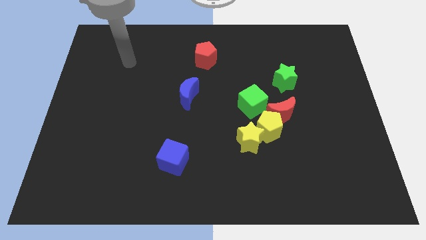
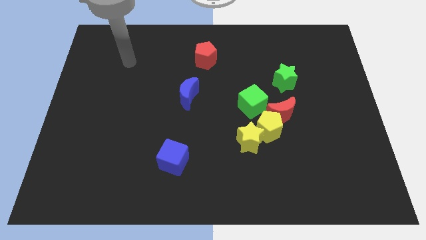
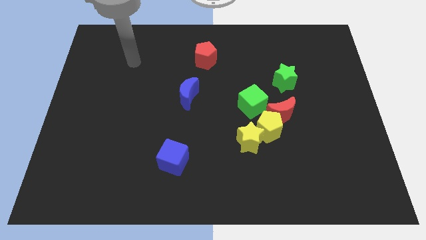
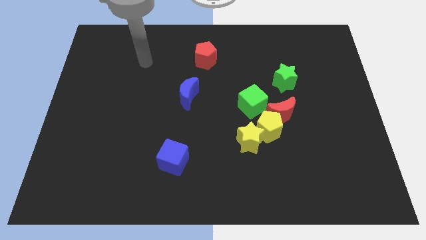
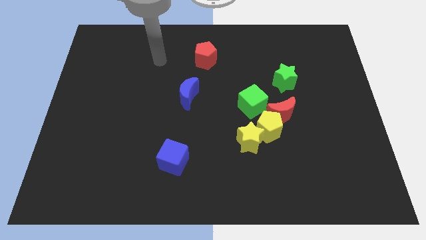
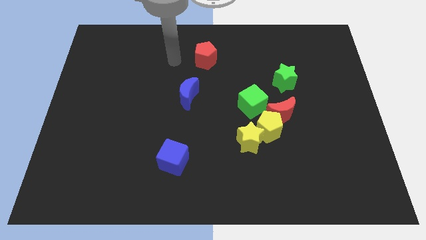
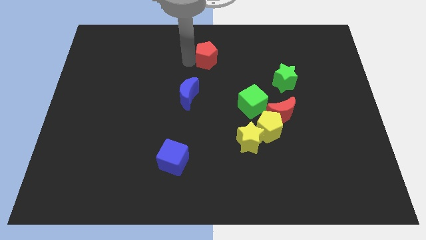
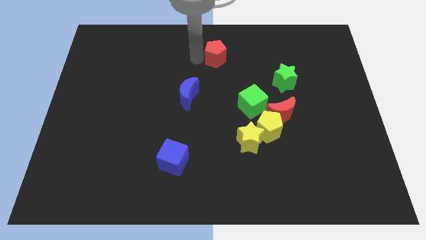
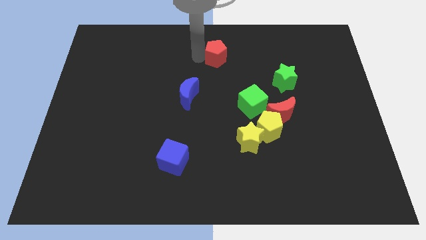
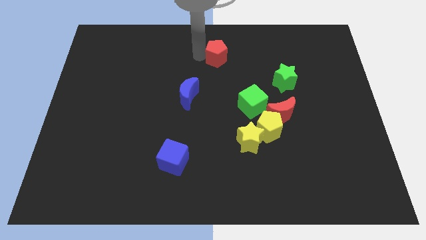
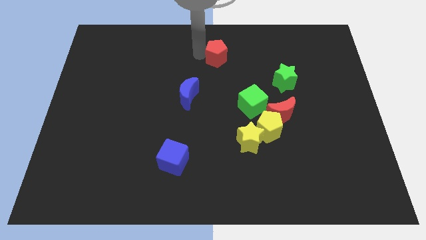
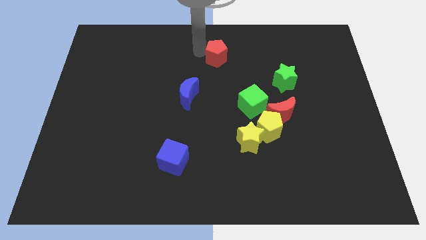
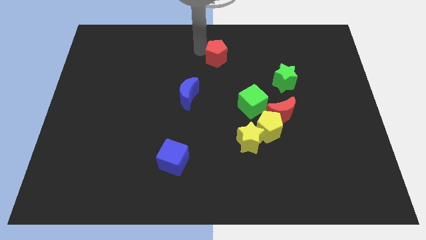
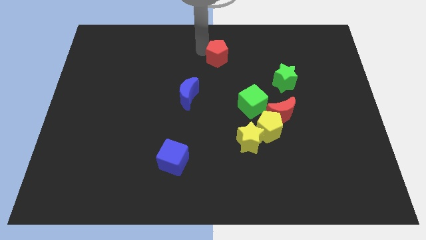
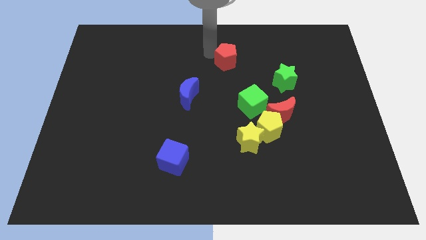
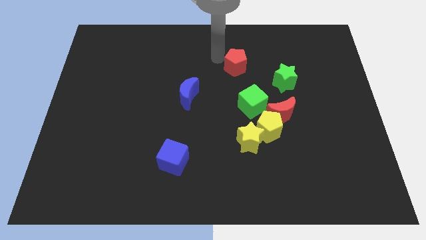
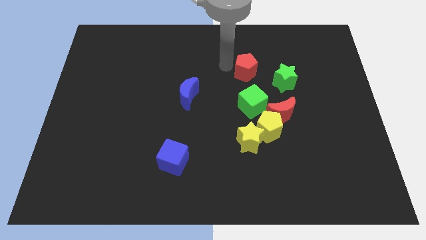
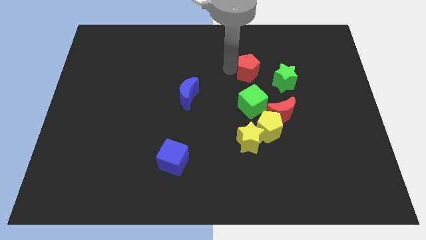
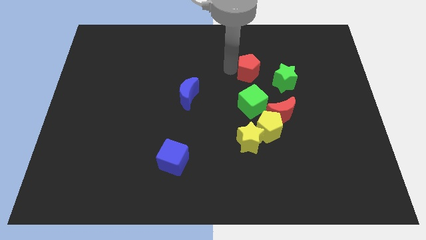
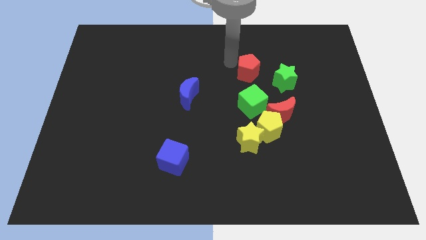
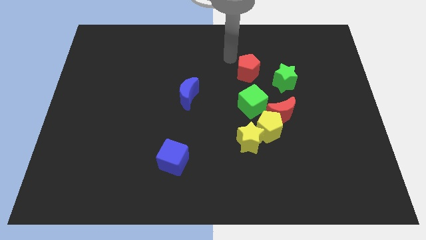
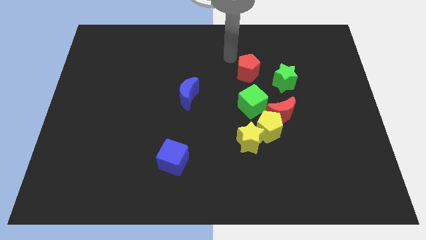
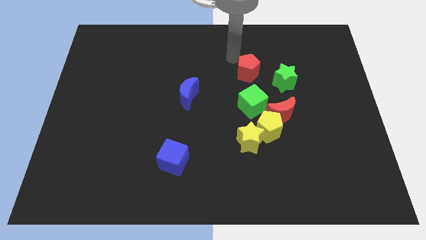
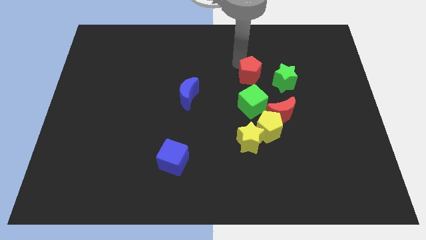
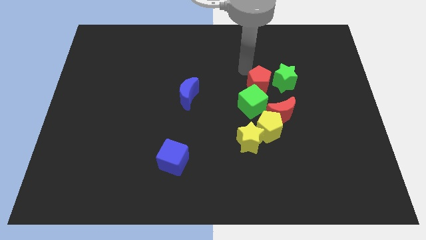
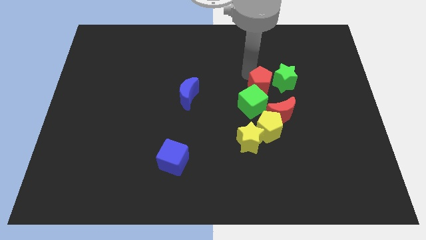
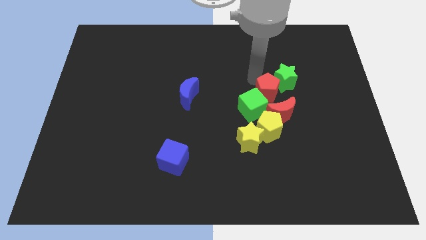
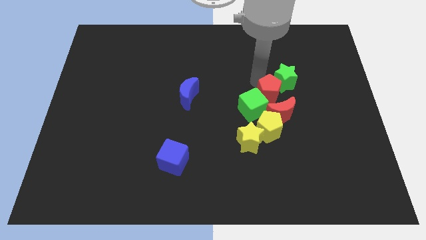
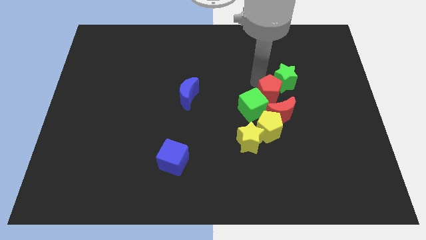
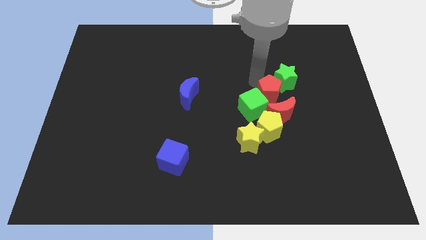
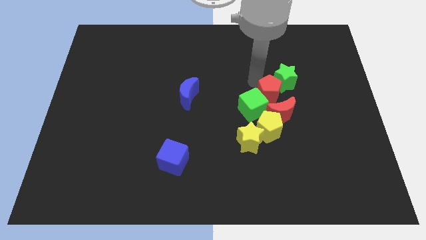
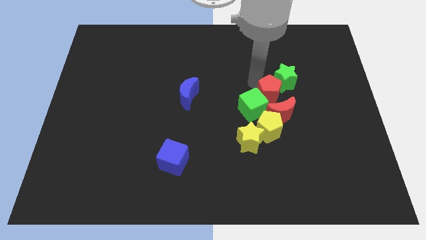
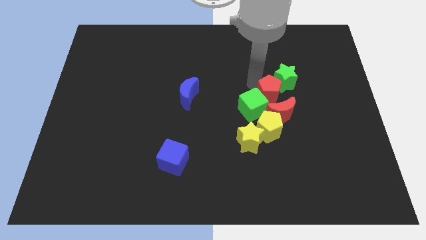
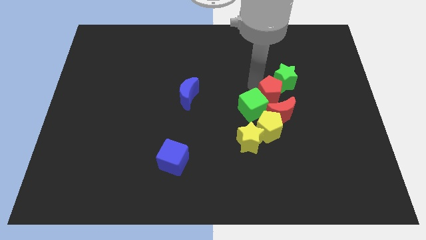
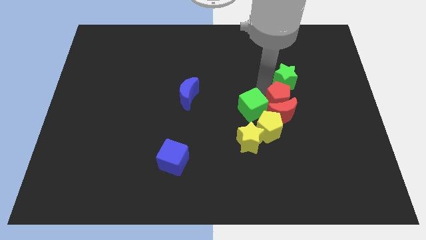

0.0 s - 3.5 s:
place the red pentagon in between the green blocks

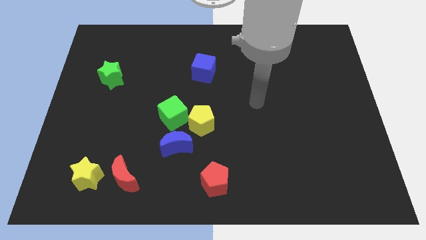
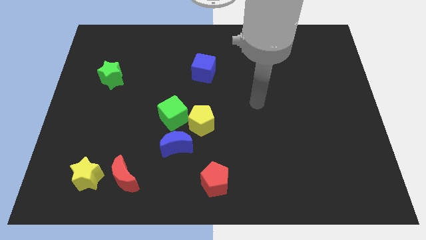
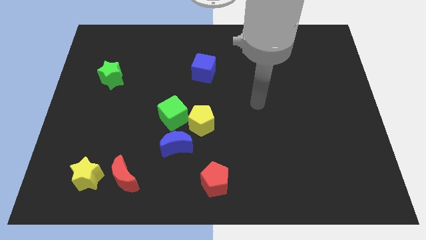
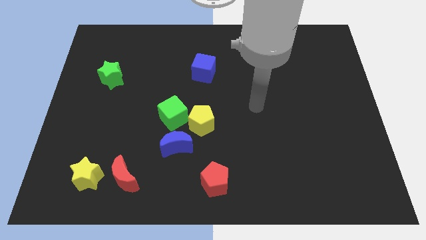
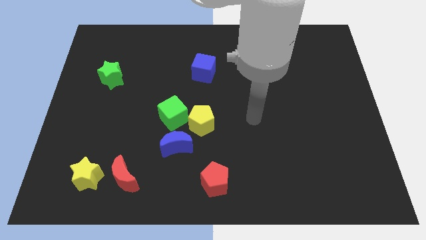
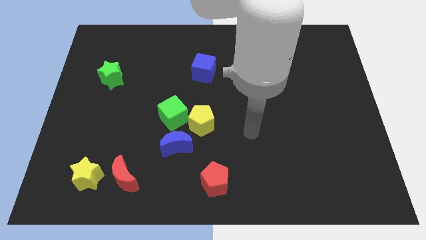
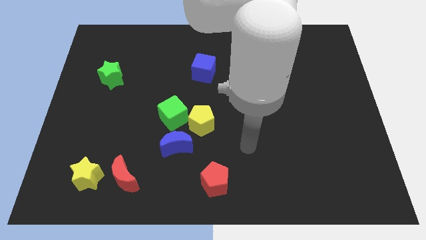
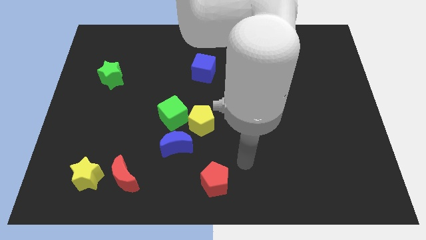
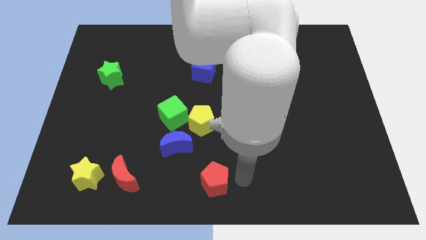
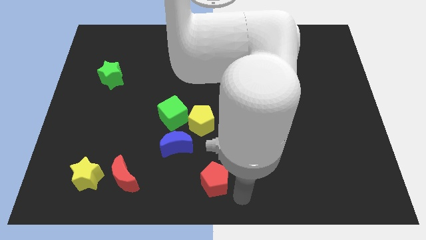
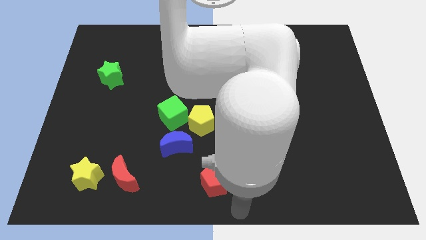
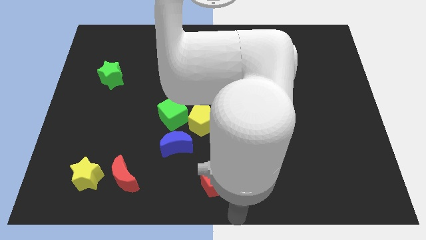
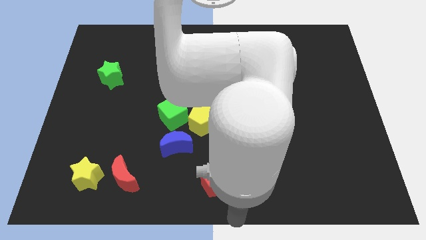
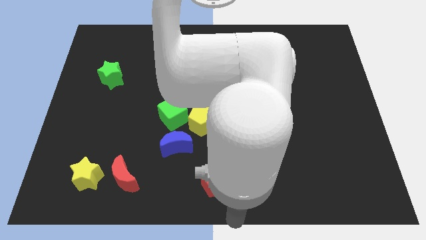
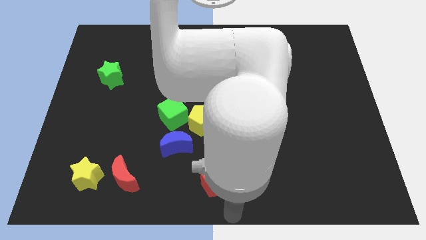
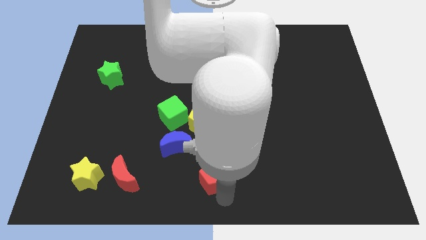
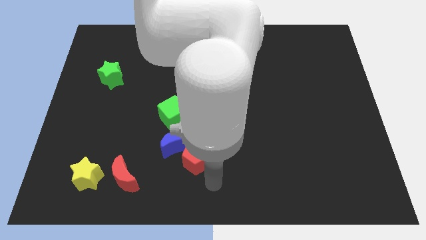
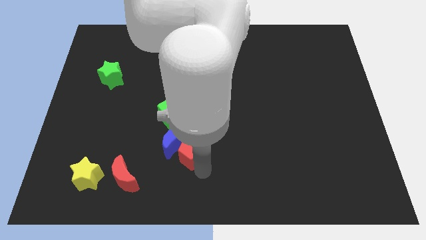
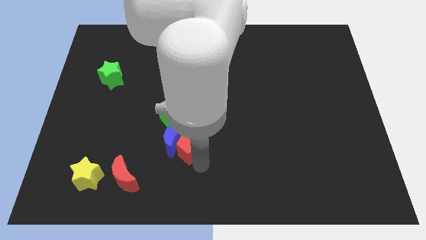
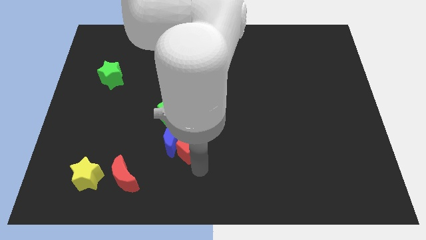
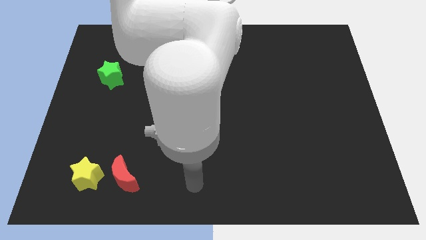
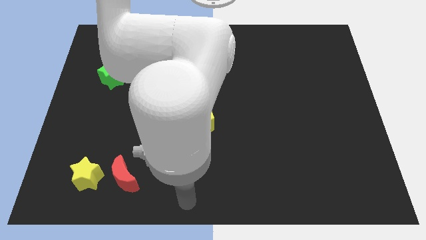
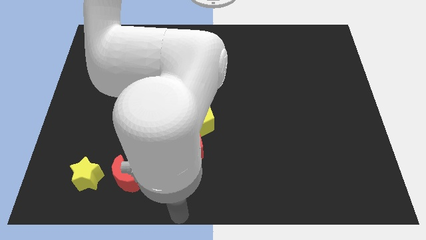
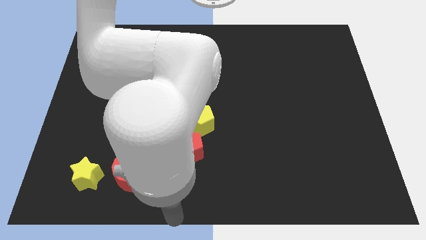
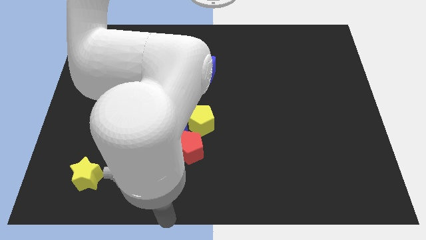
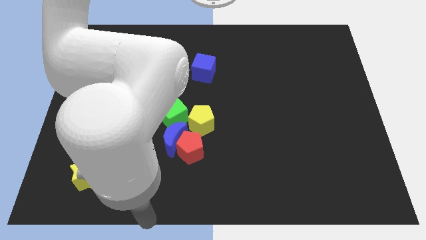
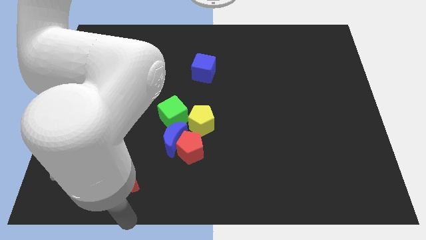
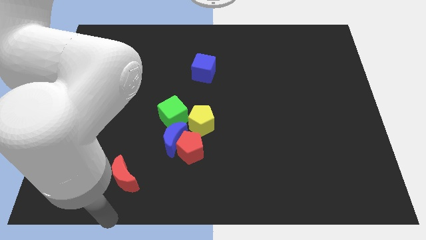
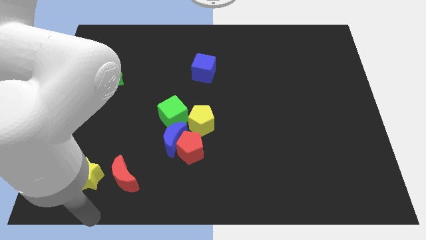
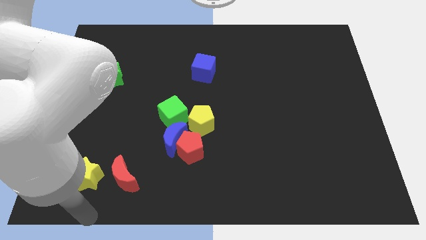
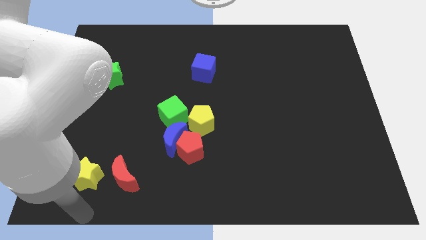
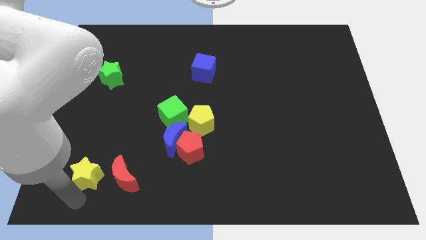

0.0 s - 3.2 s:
push the red pentagon into the blue cube

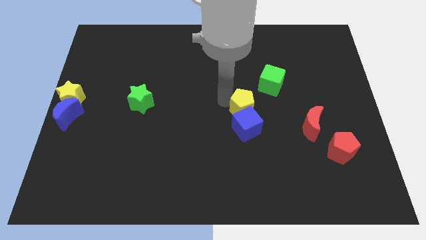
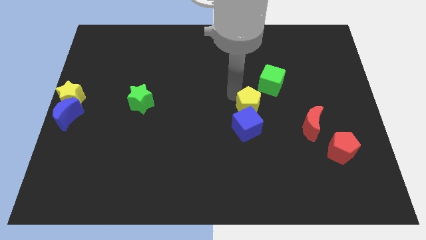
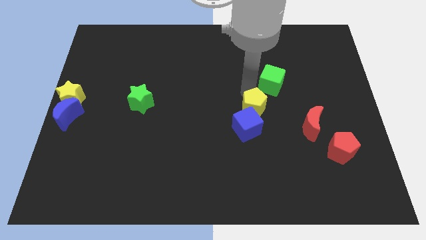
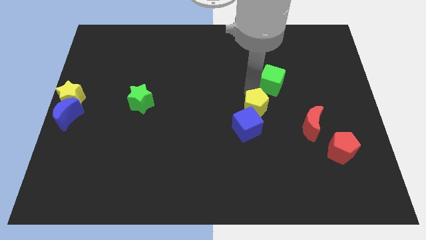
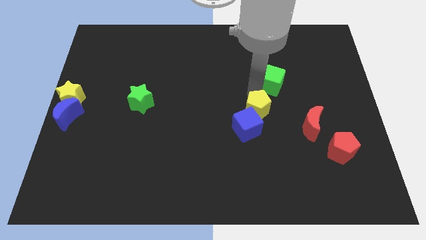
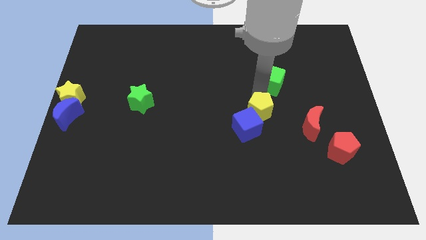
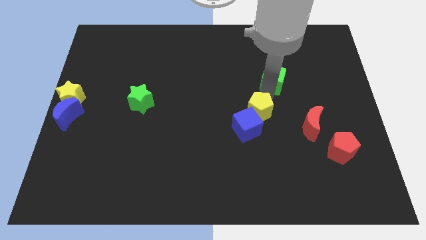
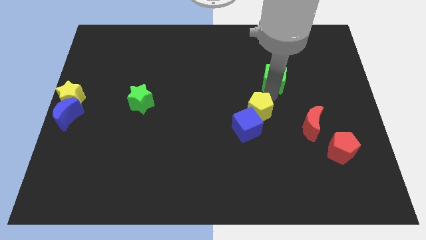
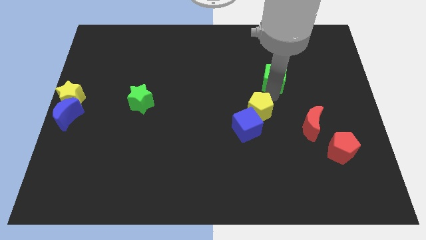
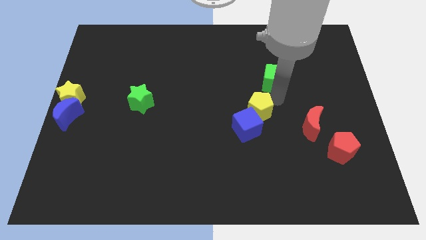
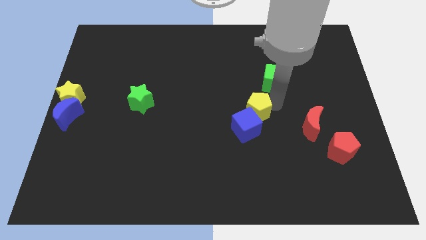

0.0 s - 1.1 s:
place the yellow pentagon in between the green cube and blue cube

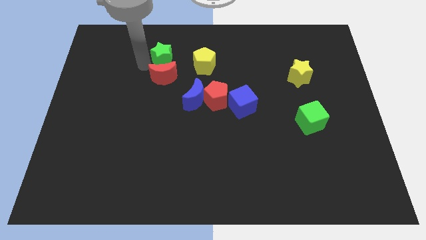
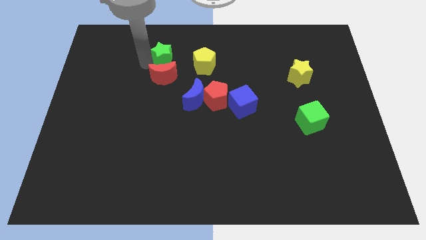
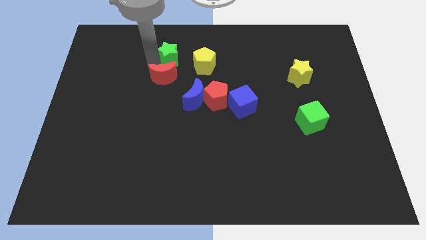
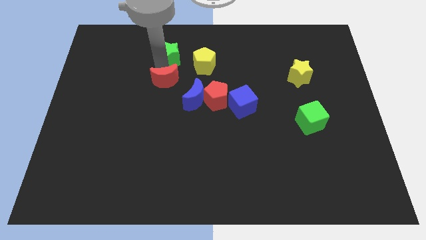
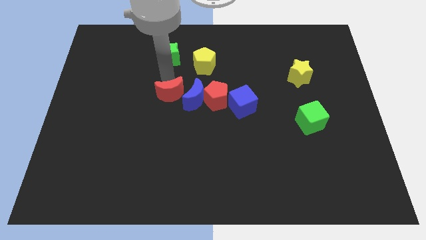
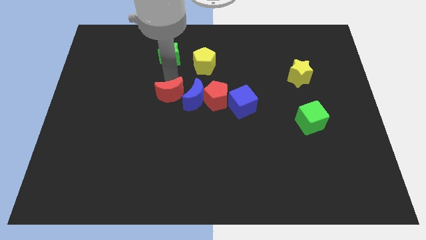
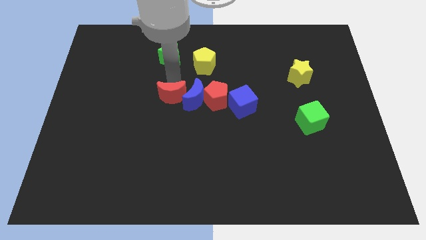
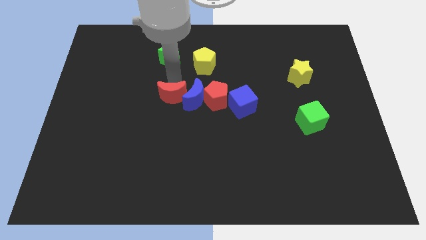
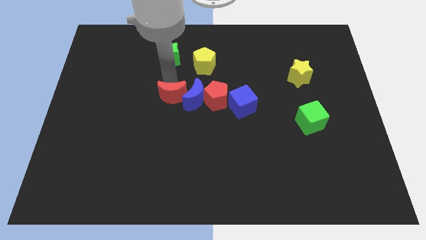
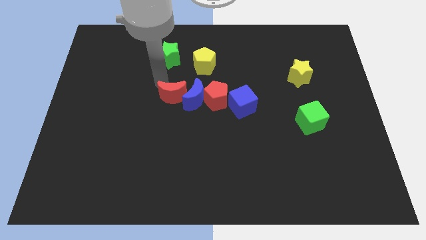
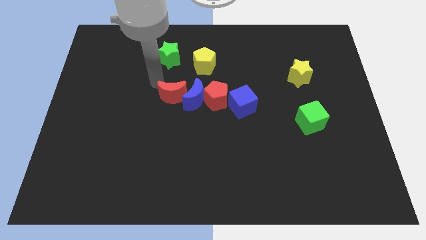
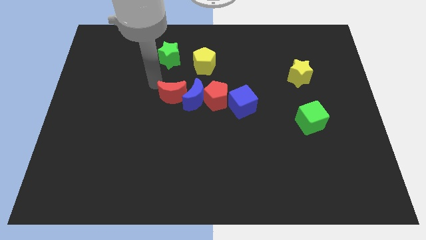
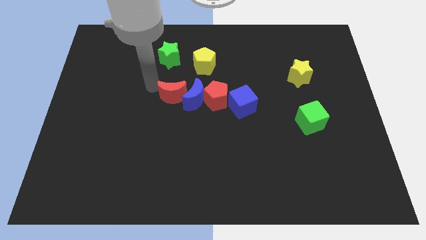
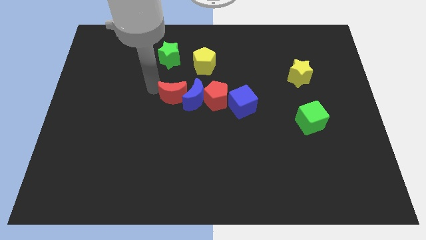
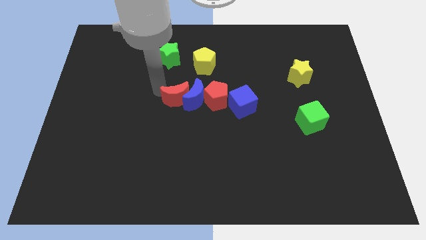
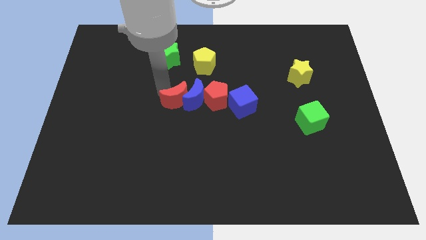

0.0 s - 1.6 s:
push the red crescent to the left of the blue crescent
